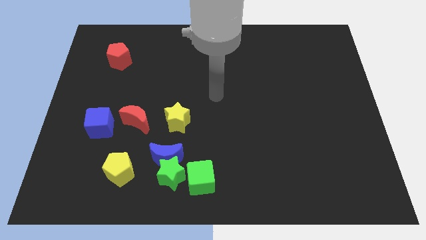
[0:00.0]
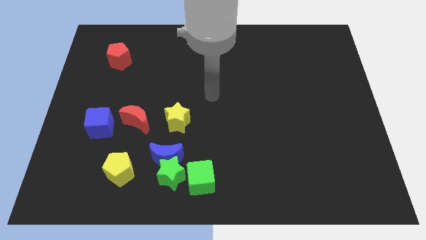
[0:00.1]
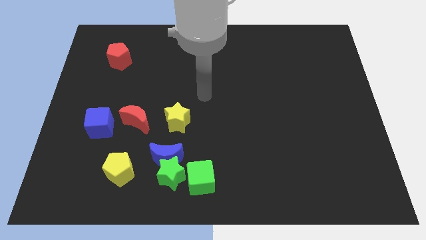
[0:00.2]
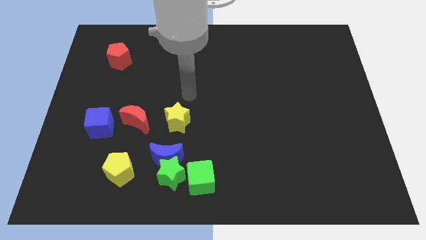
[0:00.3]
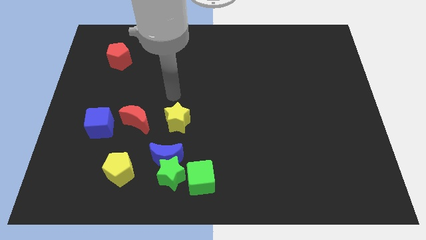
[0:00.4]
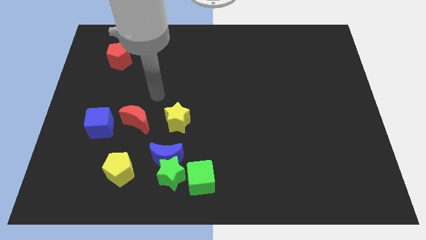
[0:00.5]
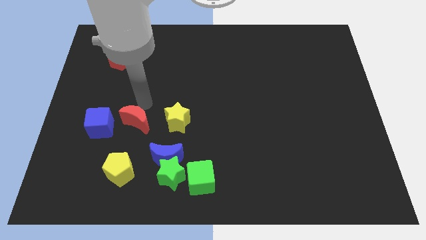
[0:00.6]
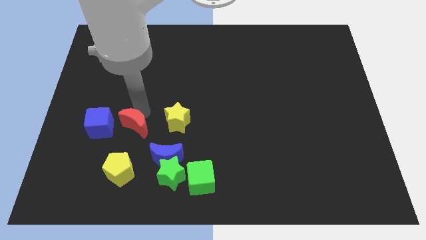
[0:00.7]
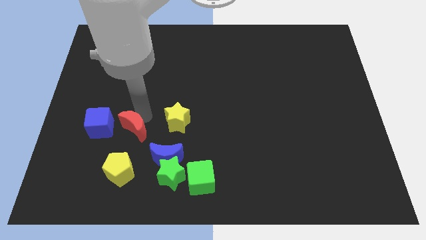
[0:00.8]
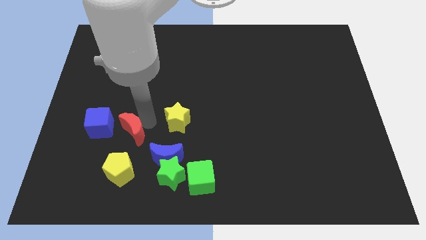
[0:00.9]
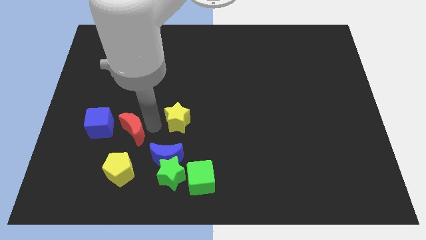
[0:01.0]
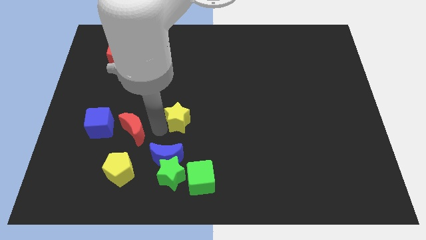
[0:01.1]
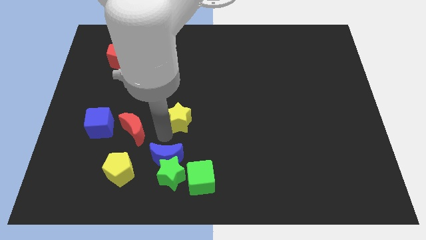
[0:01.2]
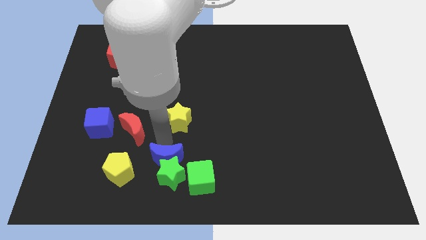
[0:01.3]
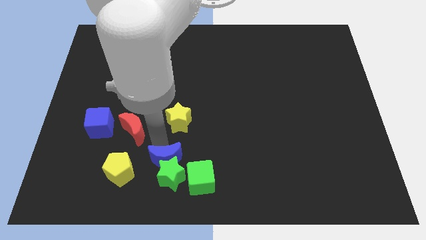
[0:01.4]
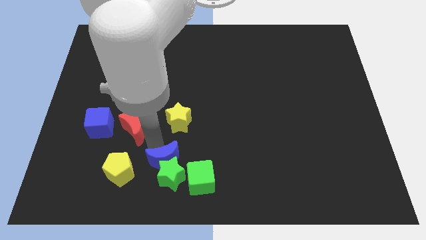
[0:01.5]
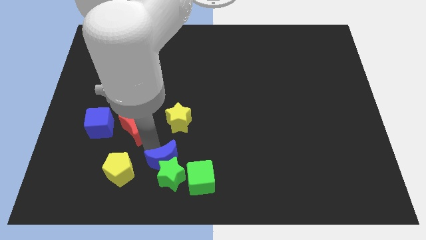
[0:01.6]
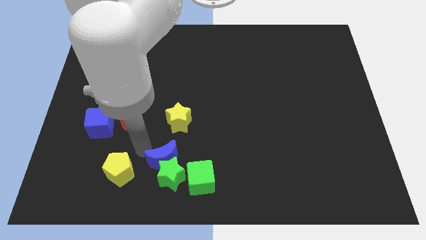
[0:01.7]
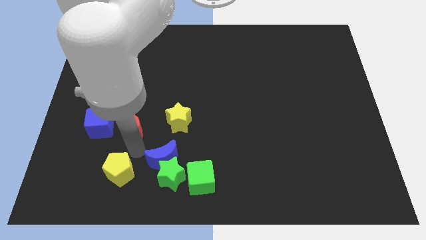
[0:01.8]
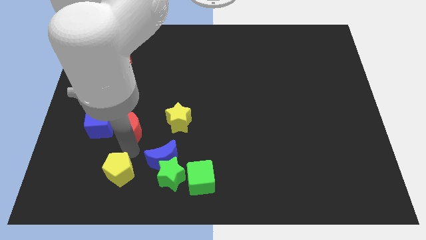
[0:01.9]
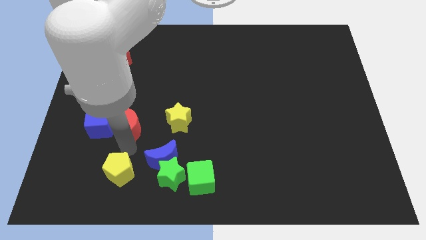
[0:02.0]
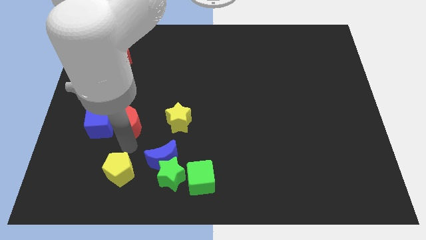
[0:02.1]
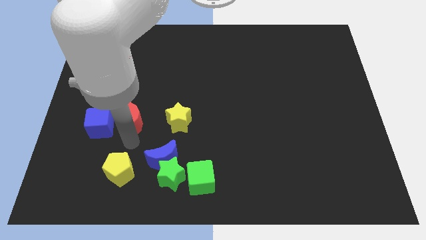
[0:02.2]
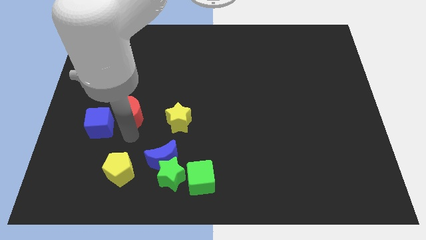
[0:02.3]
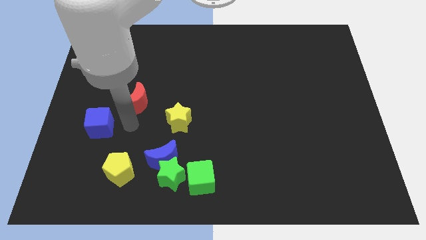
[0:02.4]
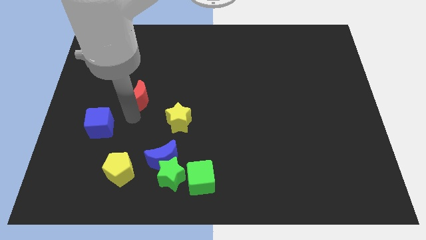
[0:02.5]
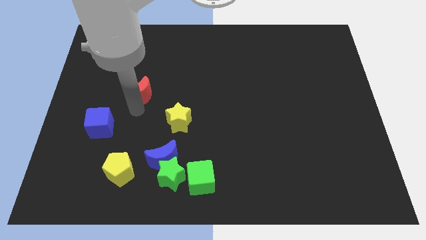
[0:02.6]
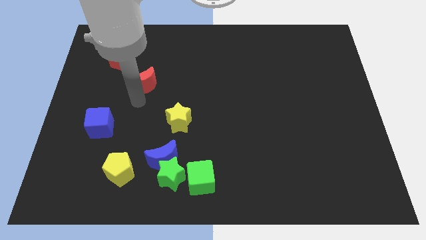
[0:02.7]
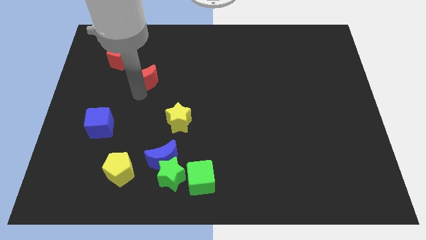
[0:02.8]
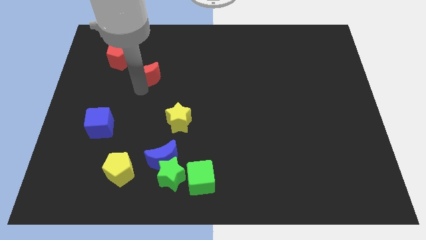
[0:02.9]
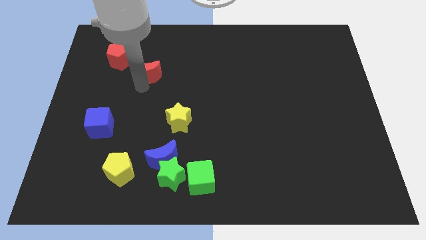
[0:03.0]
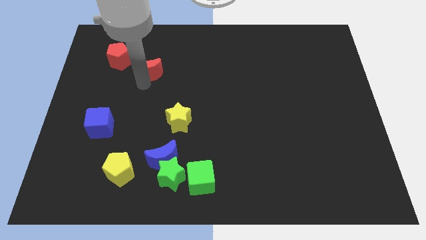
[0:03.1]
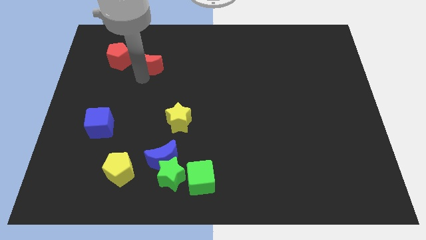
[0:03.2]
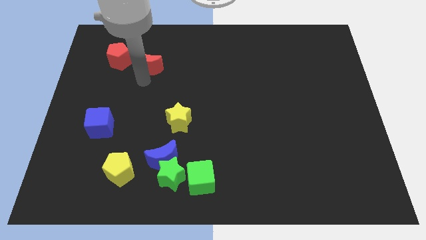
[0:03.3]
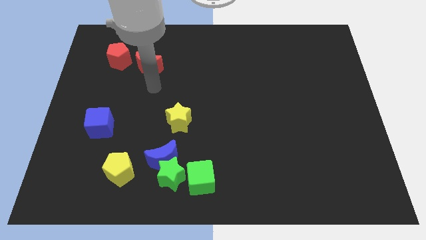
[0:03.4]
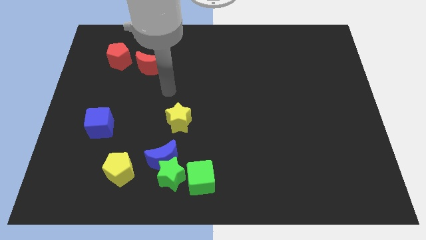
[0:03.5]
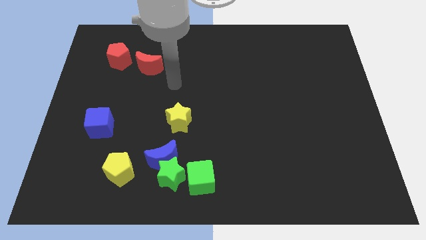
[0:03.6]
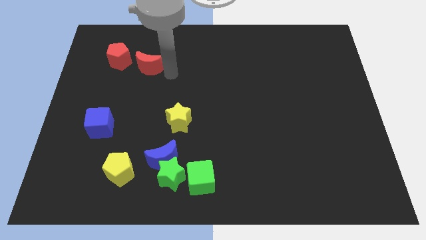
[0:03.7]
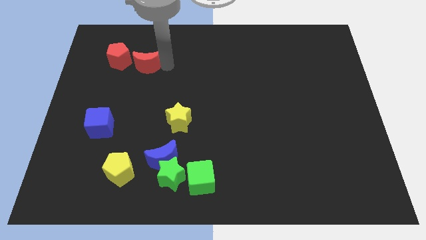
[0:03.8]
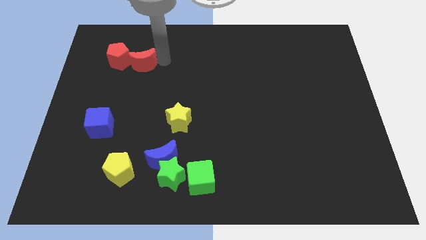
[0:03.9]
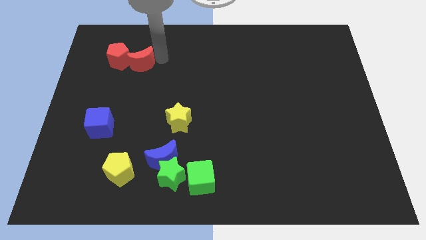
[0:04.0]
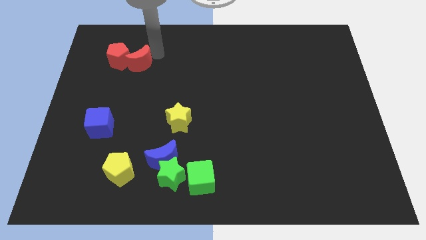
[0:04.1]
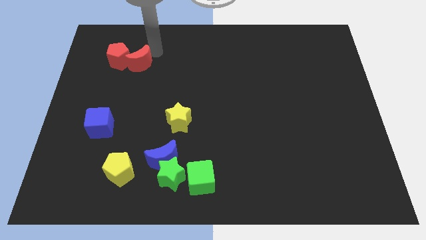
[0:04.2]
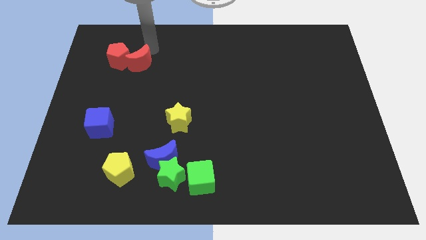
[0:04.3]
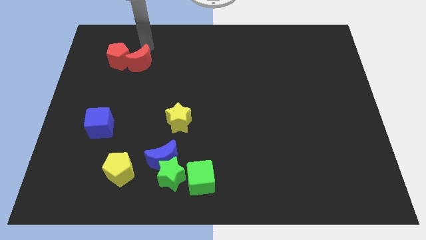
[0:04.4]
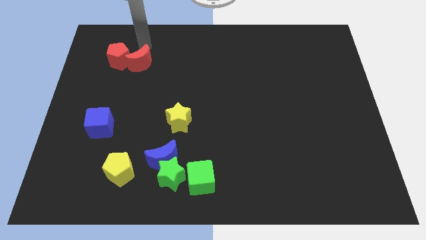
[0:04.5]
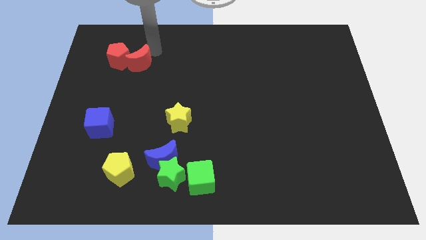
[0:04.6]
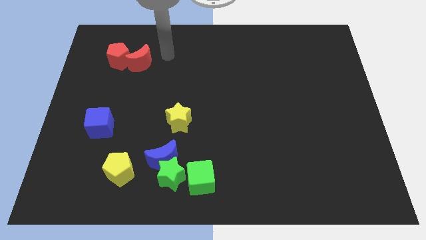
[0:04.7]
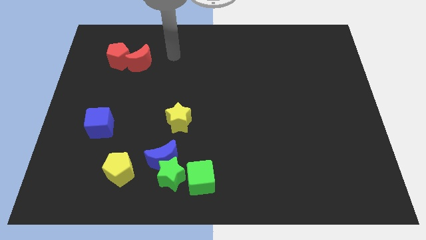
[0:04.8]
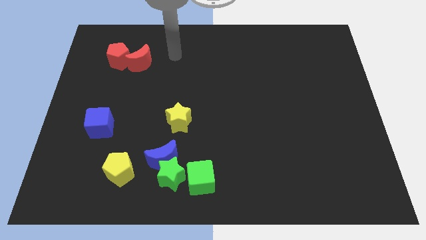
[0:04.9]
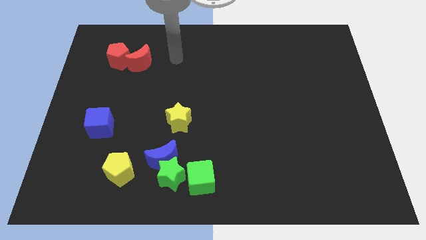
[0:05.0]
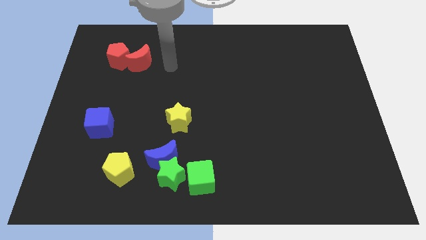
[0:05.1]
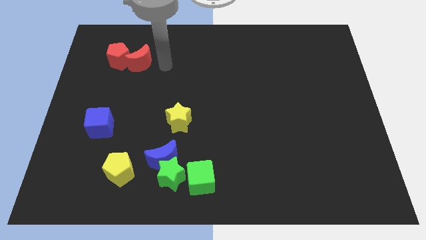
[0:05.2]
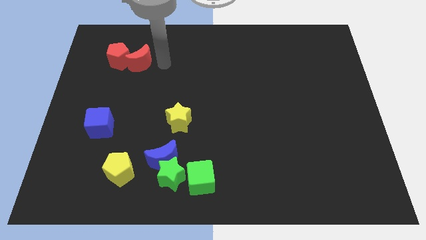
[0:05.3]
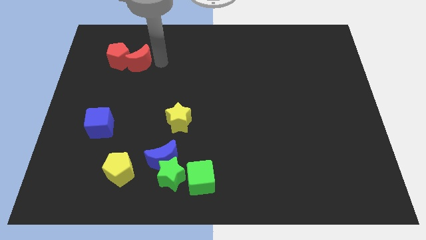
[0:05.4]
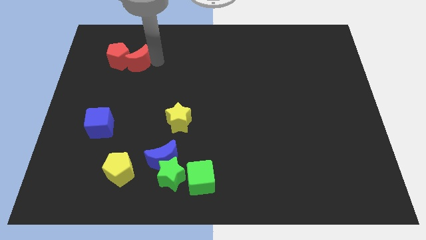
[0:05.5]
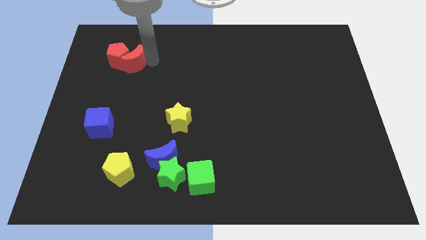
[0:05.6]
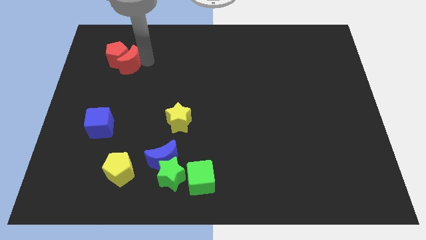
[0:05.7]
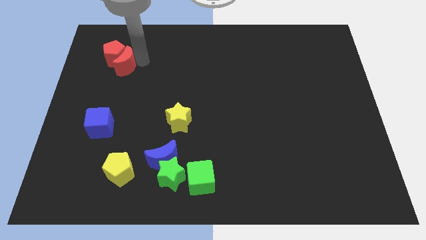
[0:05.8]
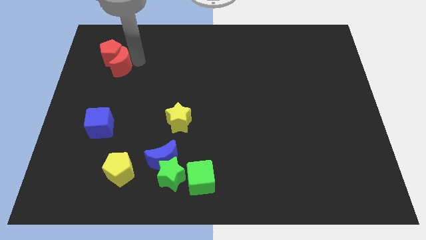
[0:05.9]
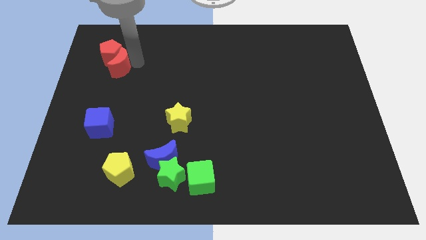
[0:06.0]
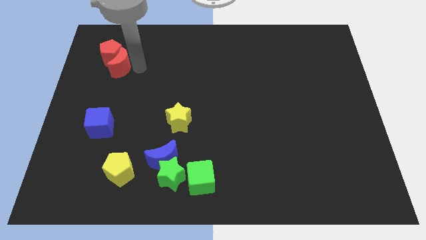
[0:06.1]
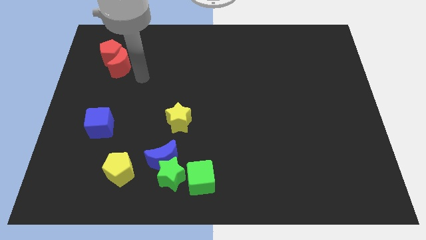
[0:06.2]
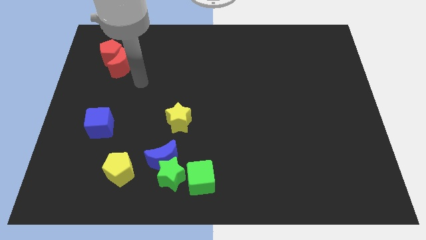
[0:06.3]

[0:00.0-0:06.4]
move red moon into red pentagon

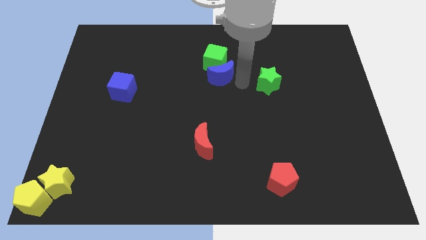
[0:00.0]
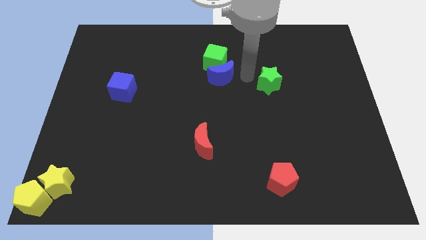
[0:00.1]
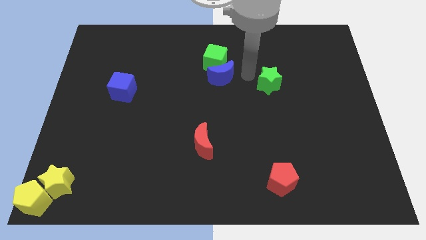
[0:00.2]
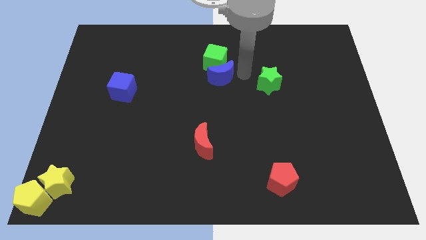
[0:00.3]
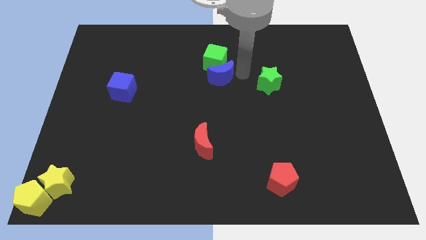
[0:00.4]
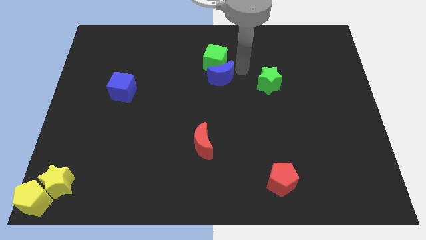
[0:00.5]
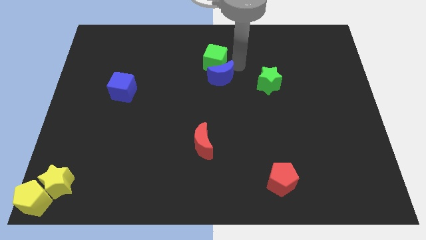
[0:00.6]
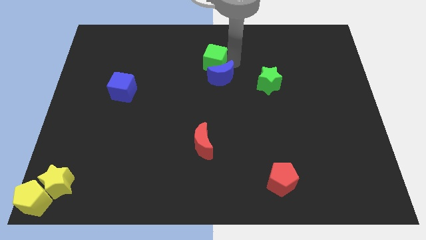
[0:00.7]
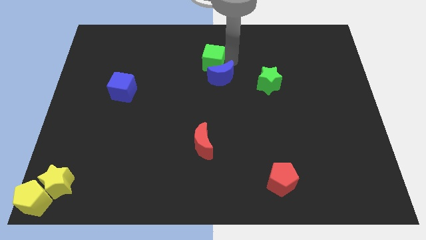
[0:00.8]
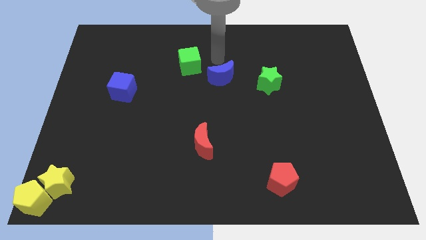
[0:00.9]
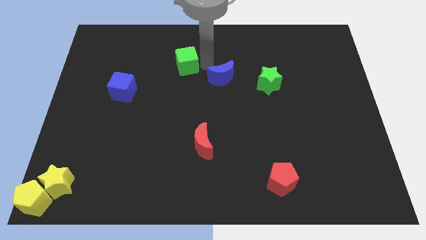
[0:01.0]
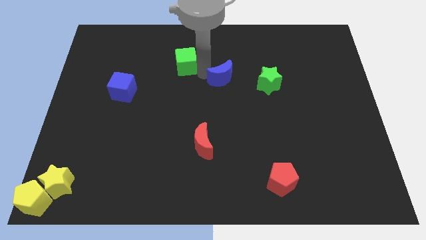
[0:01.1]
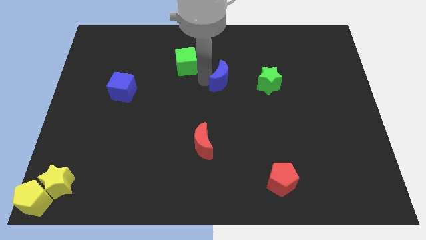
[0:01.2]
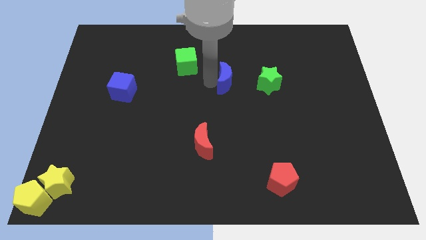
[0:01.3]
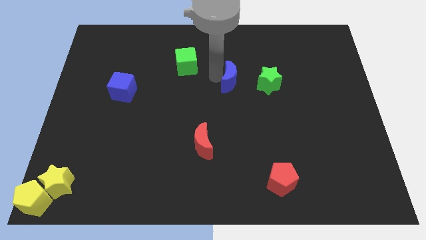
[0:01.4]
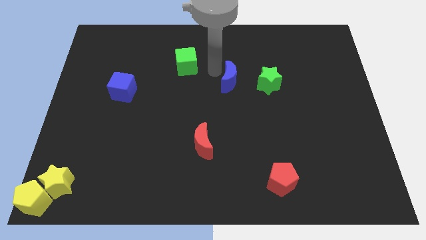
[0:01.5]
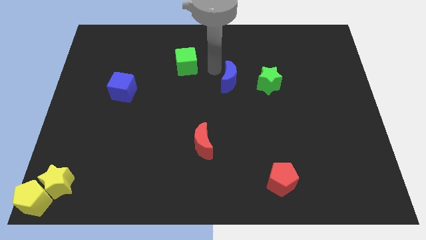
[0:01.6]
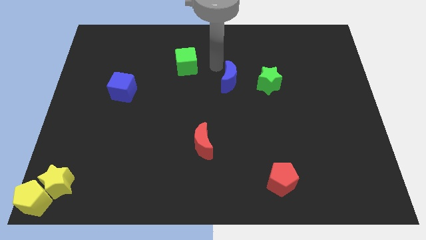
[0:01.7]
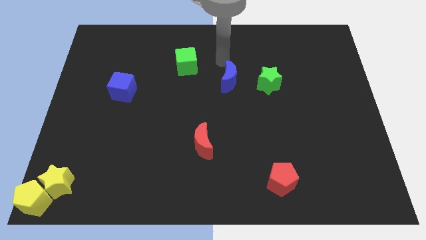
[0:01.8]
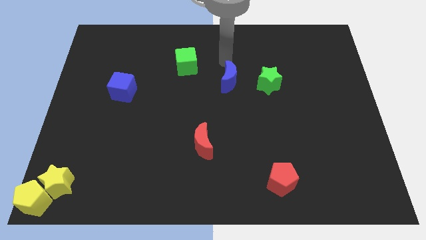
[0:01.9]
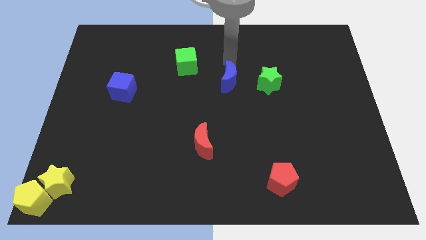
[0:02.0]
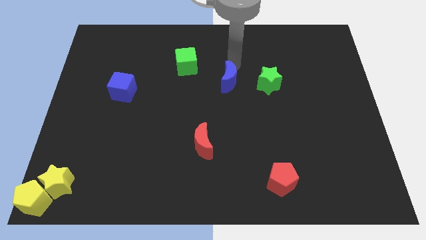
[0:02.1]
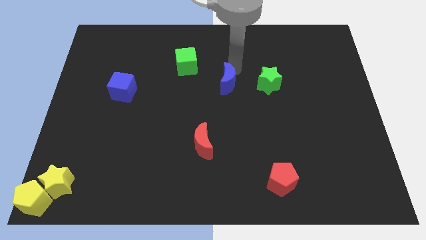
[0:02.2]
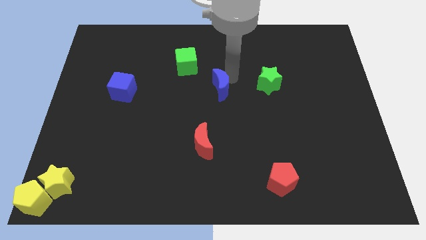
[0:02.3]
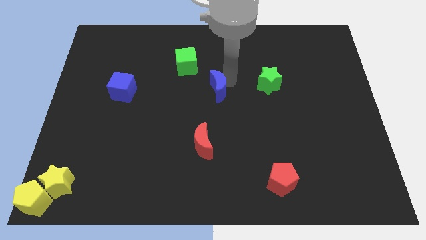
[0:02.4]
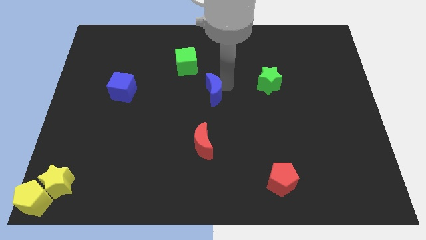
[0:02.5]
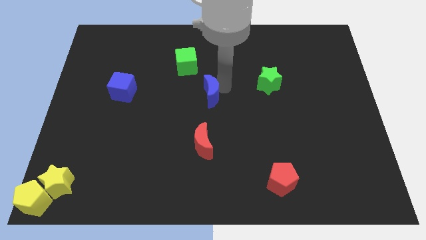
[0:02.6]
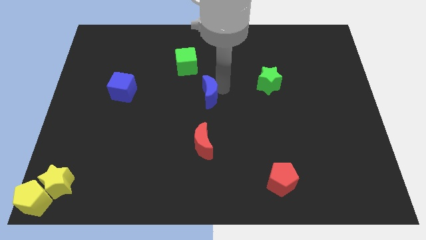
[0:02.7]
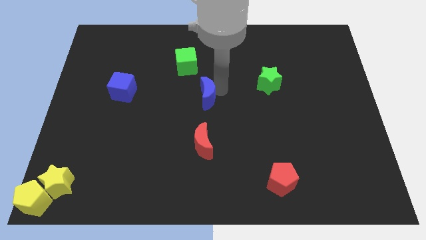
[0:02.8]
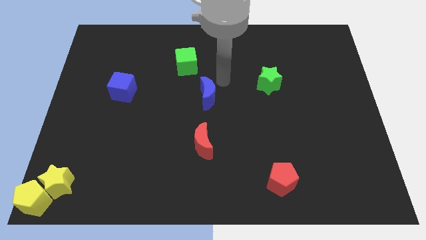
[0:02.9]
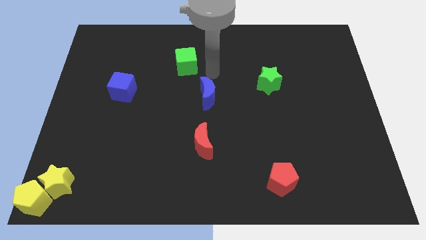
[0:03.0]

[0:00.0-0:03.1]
place the blue crescent vertically above to the red crescent
